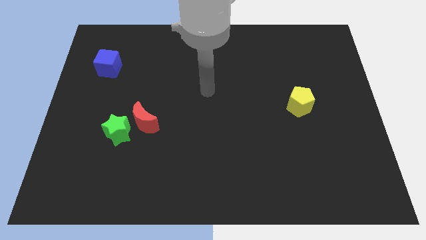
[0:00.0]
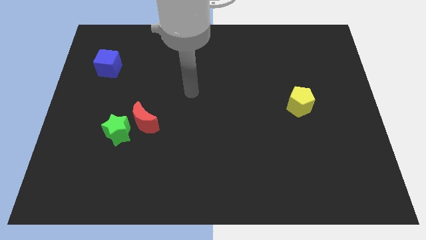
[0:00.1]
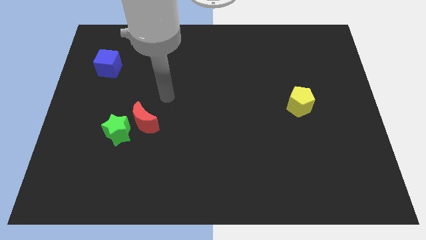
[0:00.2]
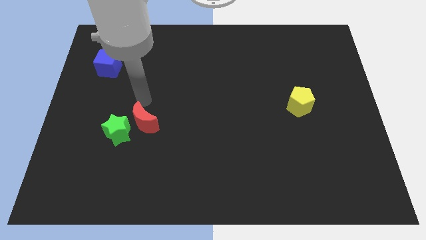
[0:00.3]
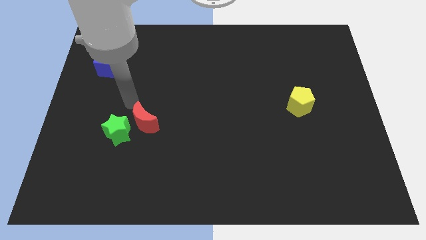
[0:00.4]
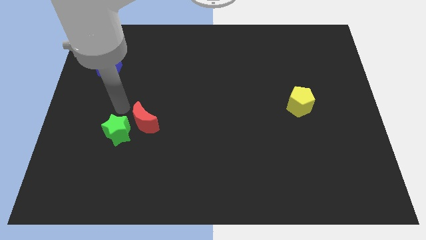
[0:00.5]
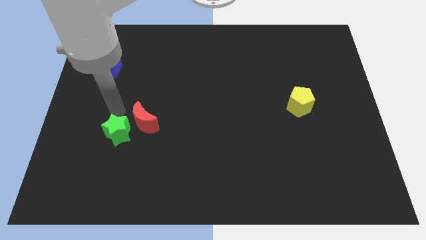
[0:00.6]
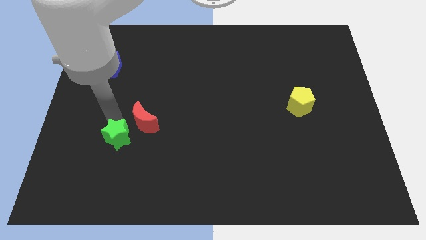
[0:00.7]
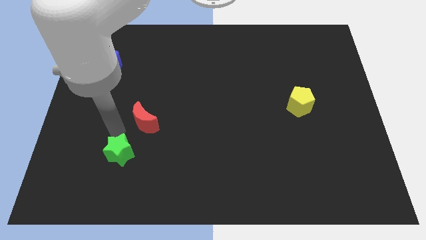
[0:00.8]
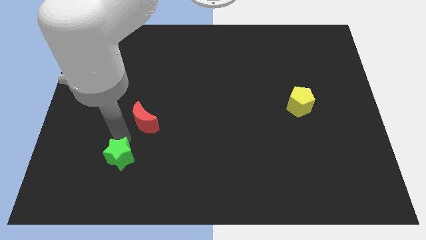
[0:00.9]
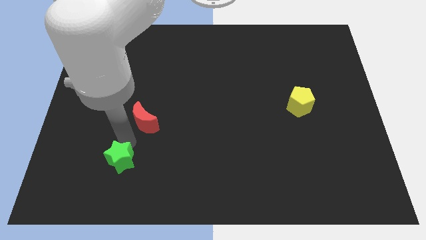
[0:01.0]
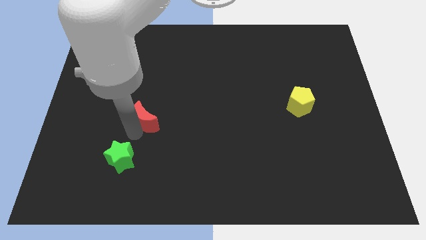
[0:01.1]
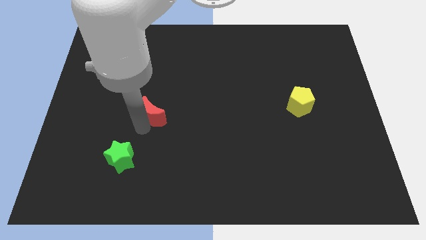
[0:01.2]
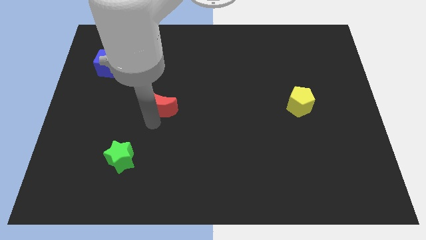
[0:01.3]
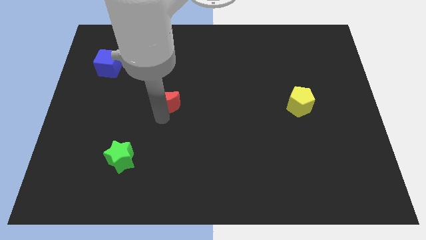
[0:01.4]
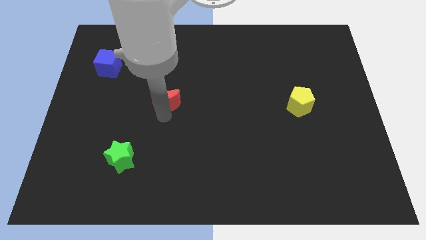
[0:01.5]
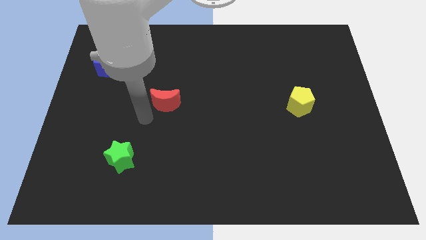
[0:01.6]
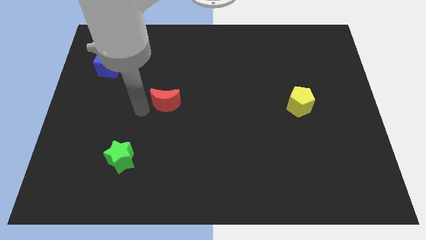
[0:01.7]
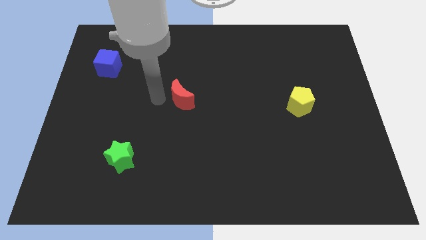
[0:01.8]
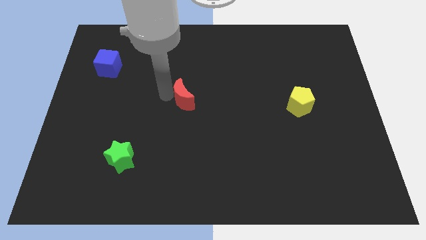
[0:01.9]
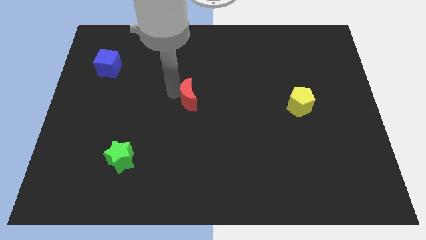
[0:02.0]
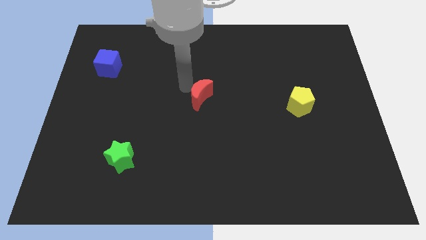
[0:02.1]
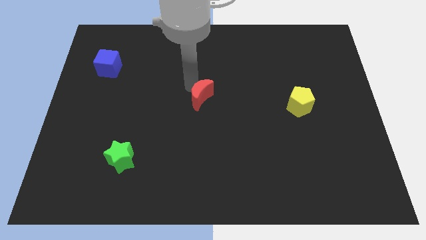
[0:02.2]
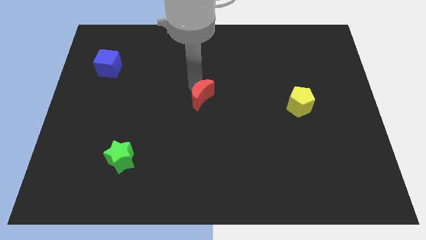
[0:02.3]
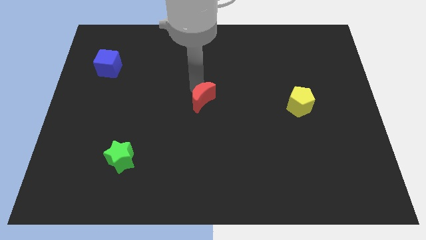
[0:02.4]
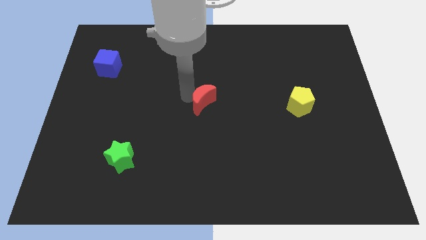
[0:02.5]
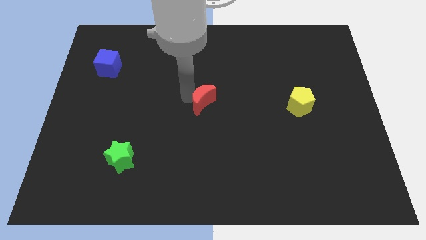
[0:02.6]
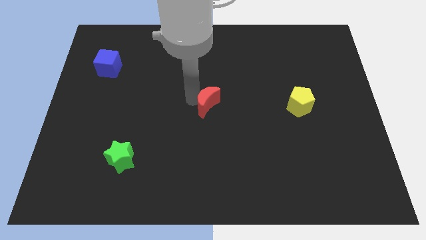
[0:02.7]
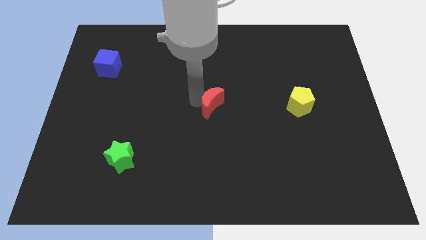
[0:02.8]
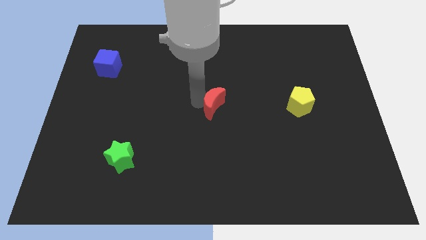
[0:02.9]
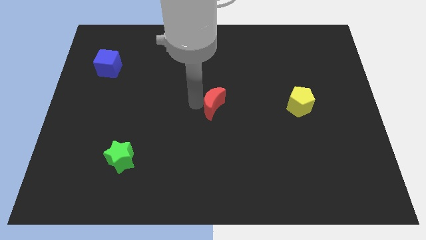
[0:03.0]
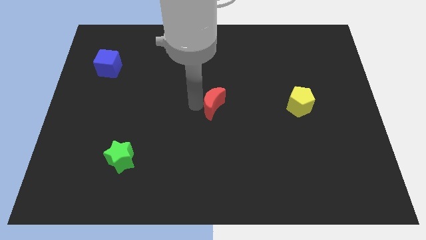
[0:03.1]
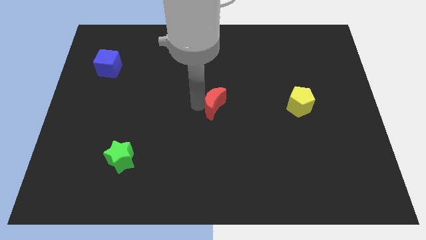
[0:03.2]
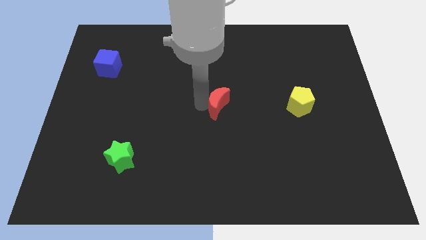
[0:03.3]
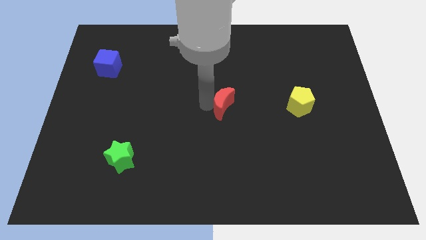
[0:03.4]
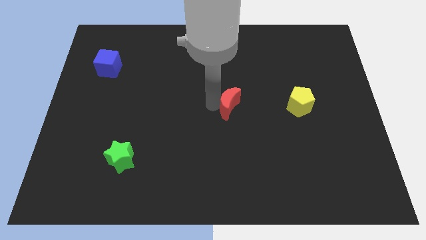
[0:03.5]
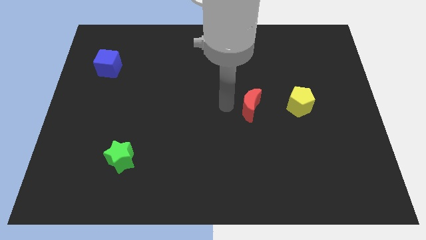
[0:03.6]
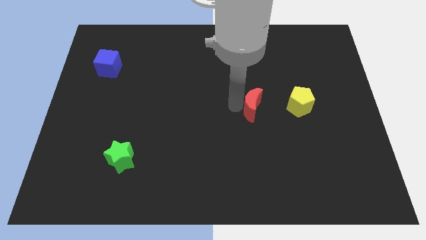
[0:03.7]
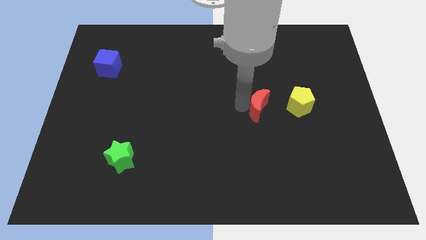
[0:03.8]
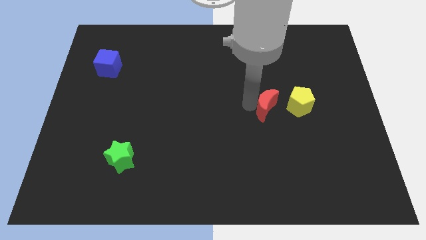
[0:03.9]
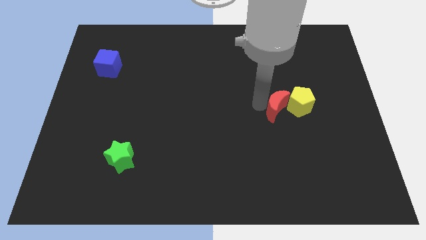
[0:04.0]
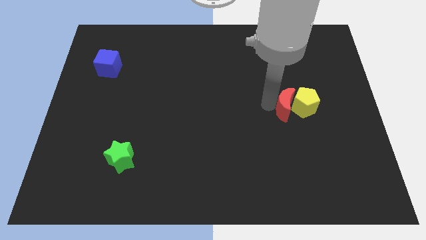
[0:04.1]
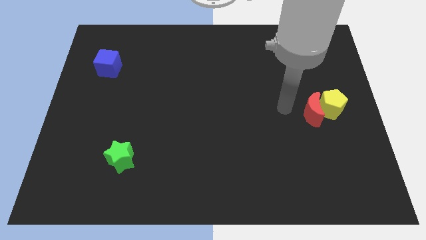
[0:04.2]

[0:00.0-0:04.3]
slide the red block towards the yellow block

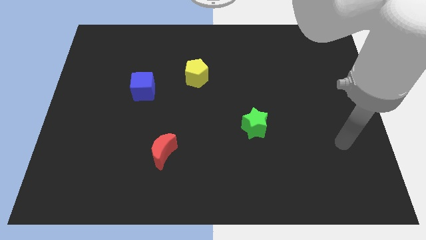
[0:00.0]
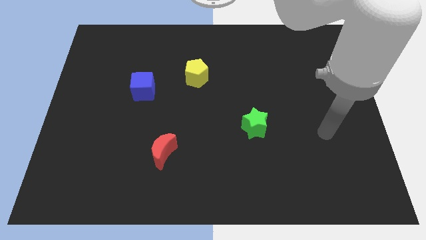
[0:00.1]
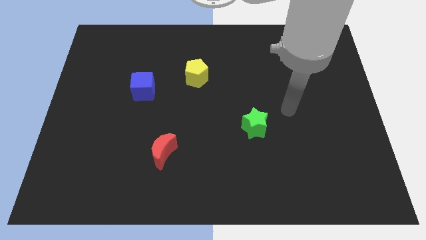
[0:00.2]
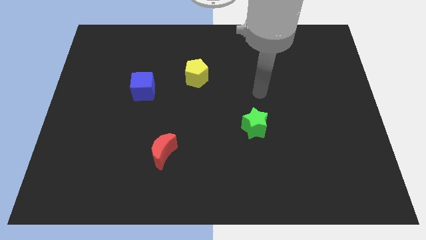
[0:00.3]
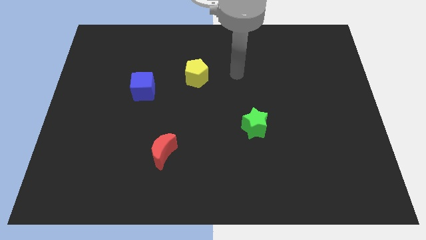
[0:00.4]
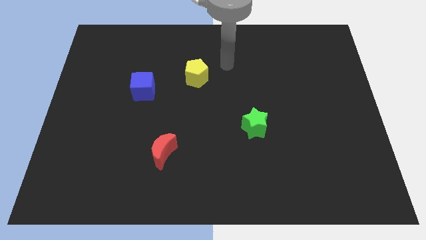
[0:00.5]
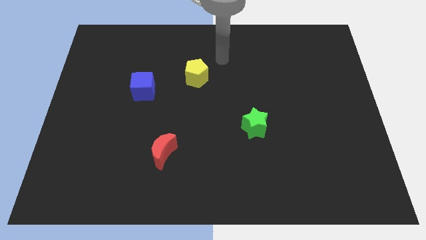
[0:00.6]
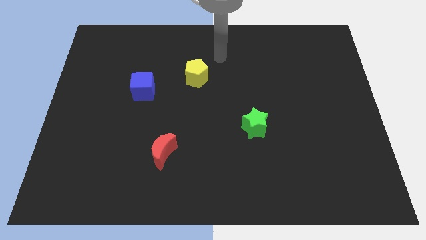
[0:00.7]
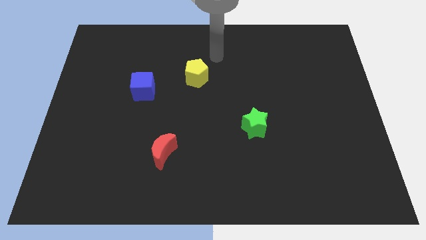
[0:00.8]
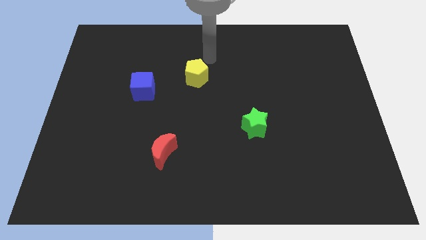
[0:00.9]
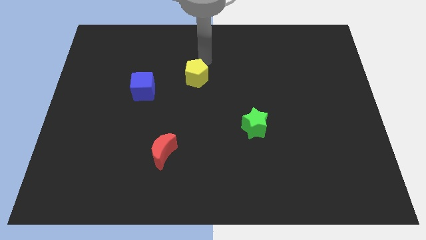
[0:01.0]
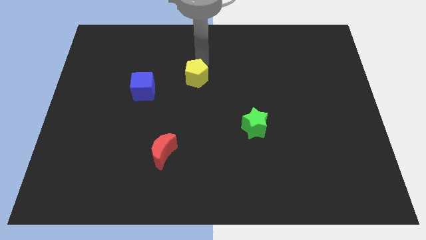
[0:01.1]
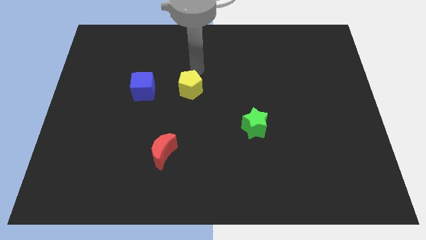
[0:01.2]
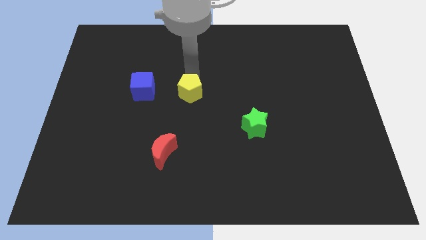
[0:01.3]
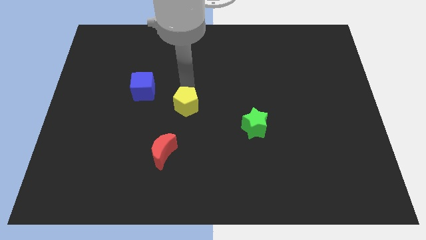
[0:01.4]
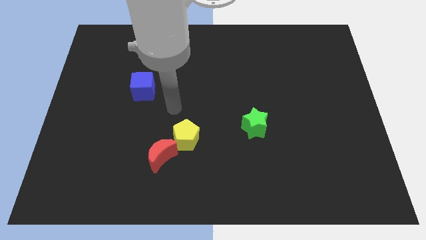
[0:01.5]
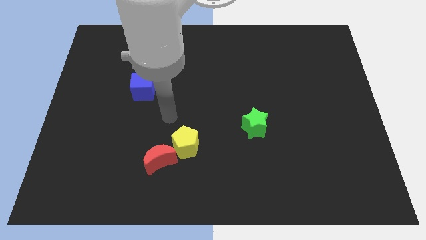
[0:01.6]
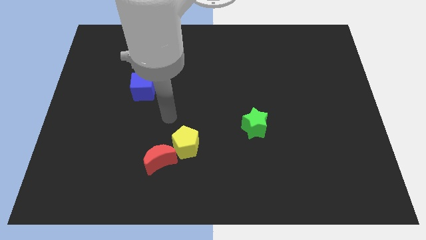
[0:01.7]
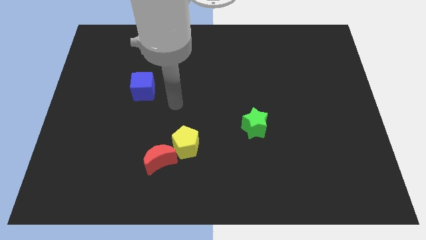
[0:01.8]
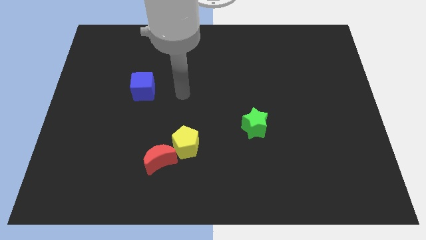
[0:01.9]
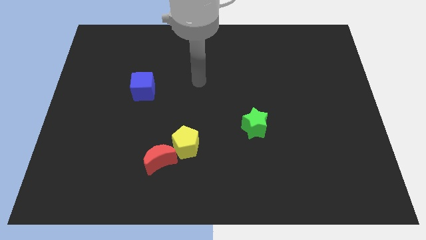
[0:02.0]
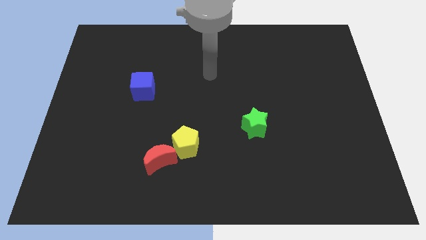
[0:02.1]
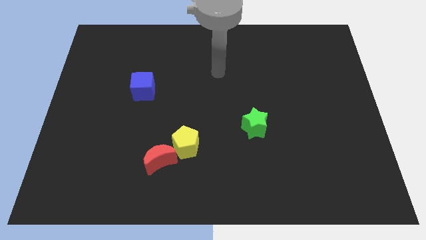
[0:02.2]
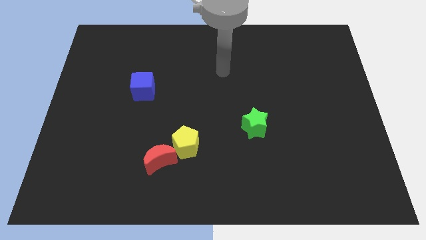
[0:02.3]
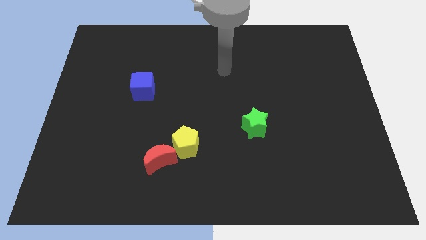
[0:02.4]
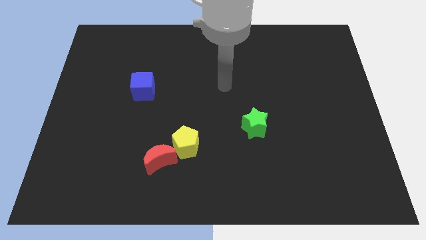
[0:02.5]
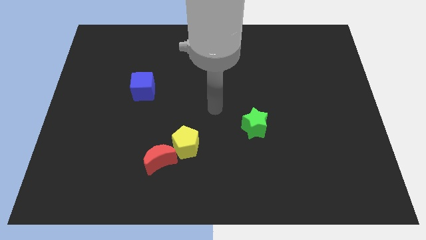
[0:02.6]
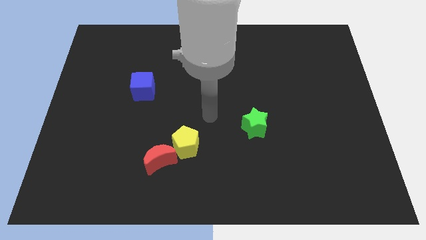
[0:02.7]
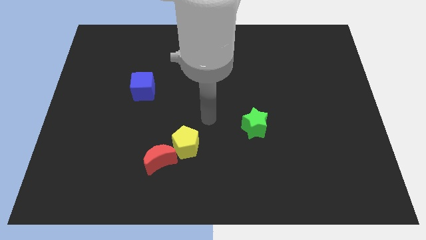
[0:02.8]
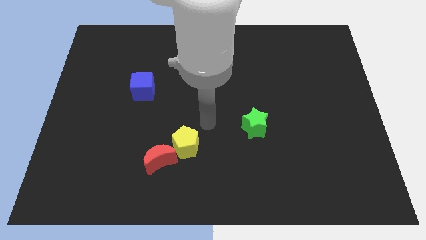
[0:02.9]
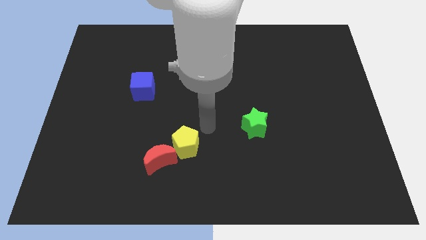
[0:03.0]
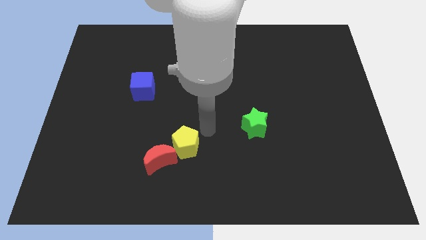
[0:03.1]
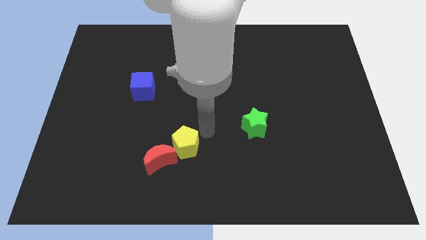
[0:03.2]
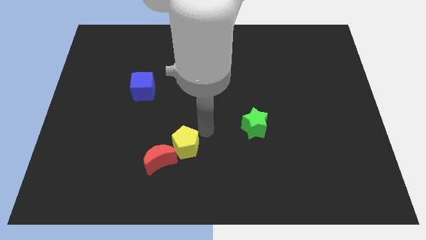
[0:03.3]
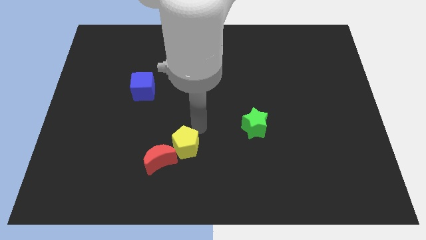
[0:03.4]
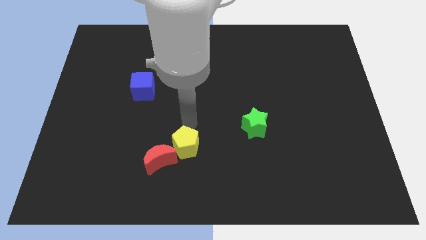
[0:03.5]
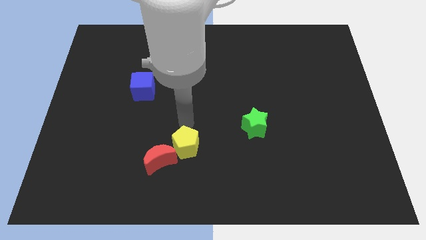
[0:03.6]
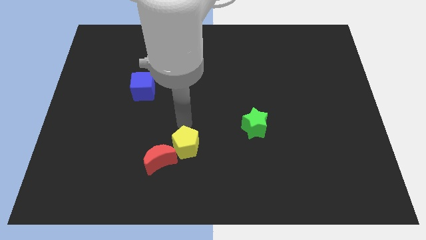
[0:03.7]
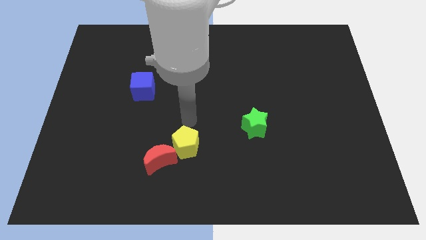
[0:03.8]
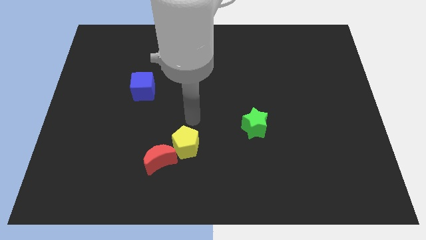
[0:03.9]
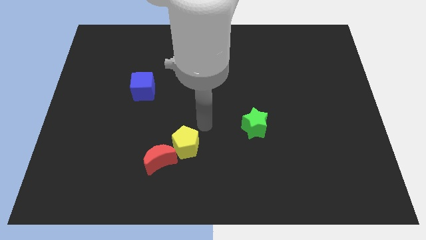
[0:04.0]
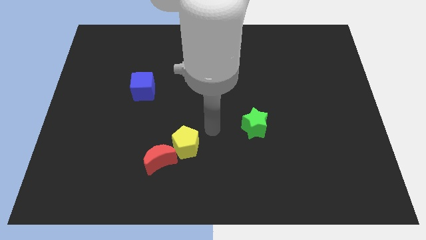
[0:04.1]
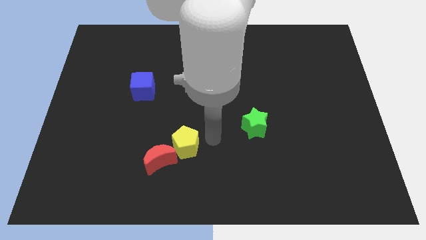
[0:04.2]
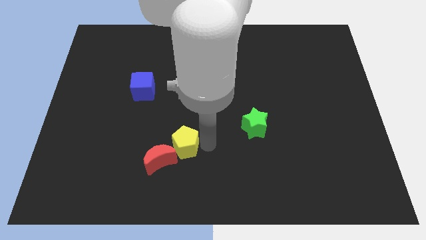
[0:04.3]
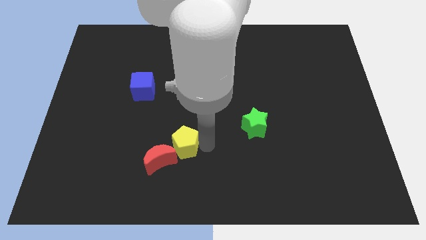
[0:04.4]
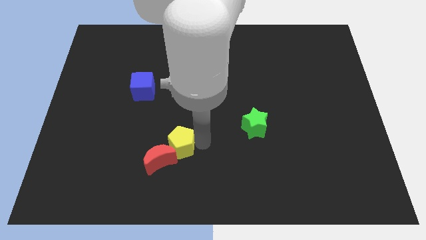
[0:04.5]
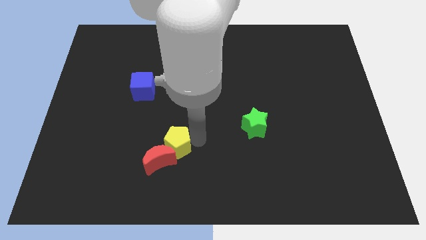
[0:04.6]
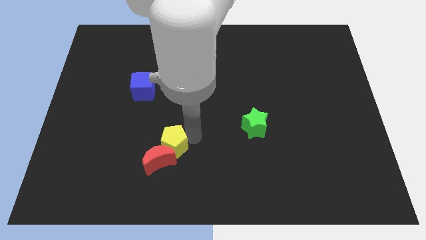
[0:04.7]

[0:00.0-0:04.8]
put the yellow block to the moon
